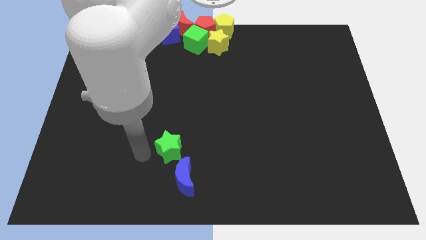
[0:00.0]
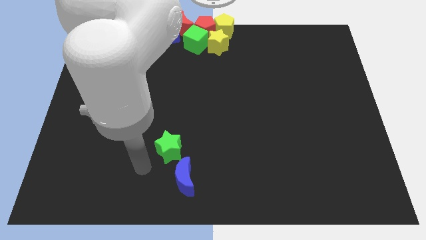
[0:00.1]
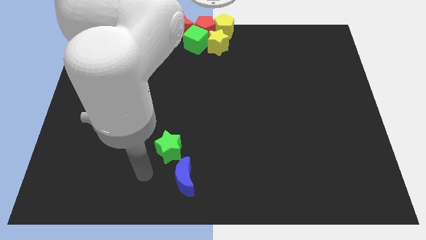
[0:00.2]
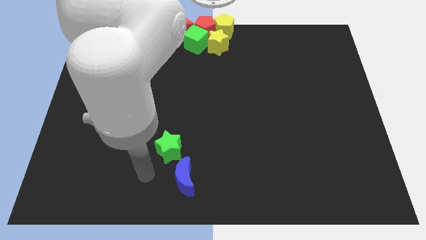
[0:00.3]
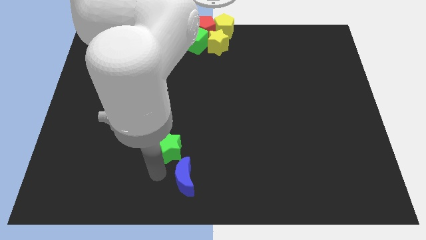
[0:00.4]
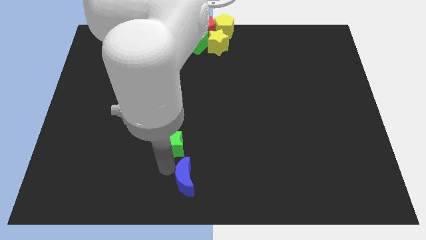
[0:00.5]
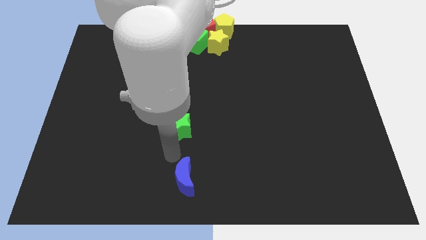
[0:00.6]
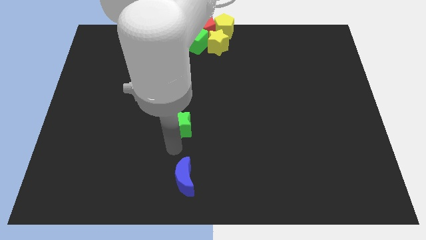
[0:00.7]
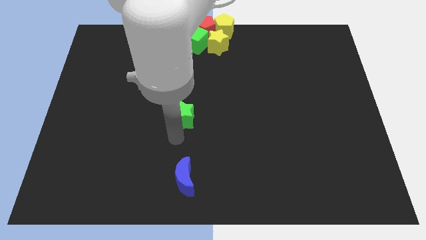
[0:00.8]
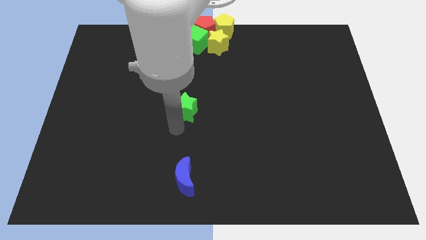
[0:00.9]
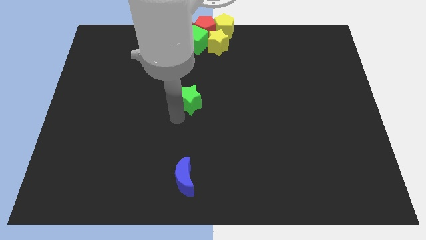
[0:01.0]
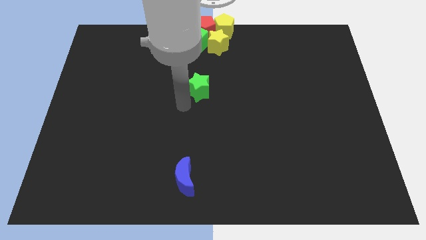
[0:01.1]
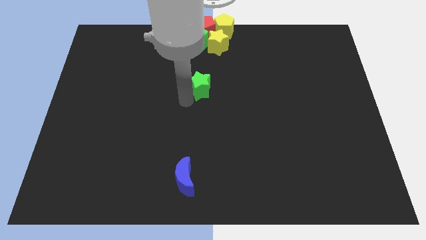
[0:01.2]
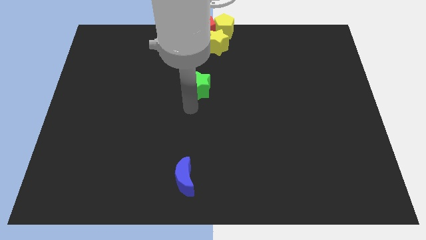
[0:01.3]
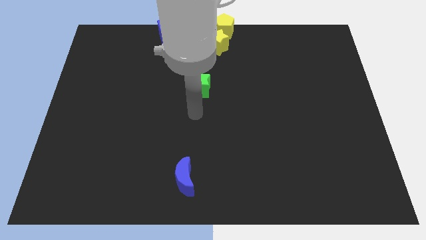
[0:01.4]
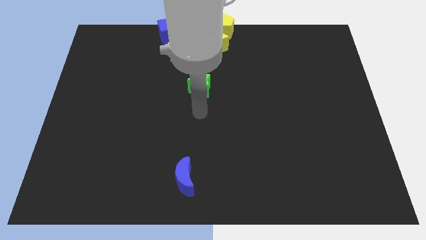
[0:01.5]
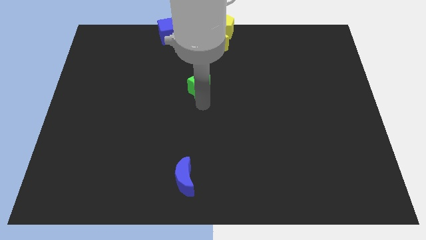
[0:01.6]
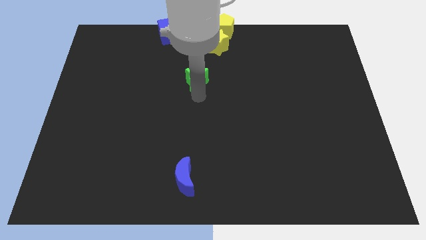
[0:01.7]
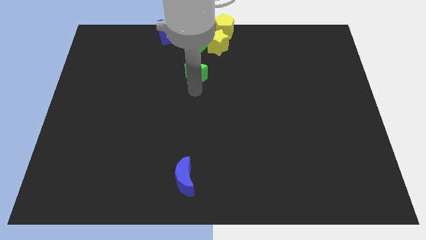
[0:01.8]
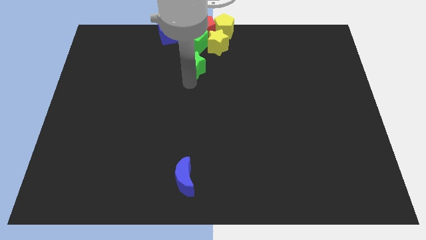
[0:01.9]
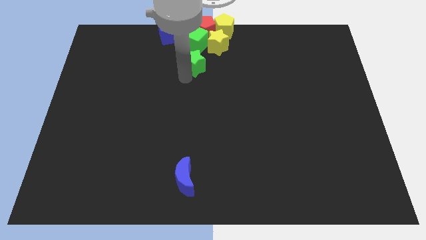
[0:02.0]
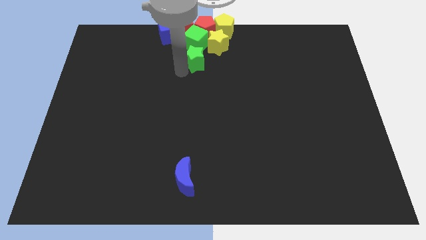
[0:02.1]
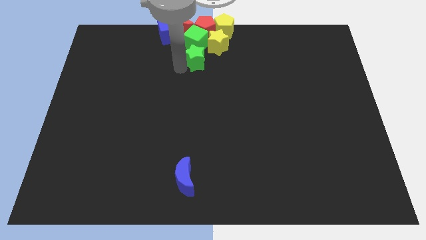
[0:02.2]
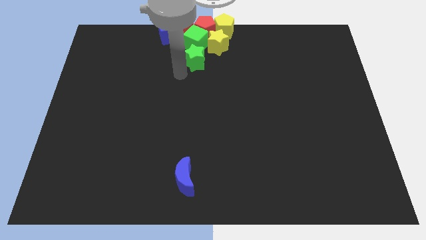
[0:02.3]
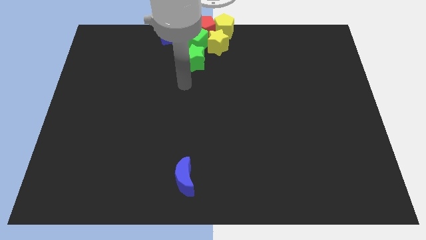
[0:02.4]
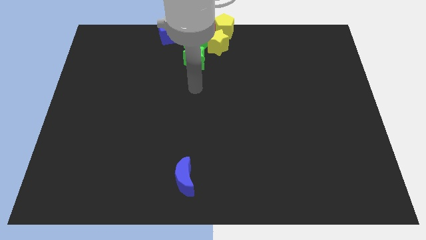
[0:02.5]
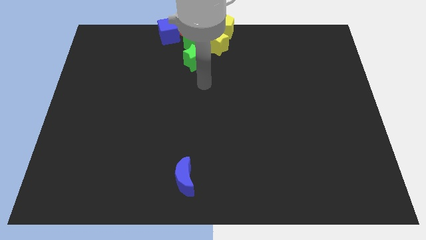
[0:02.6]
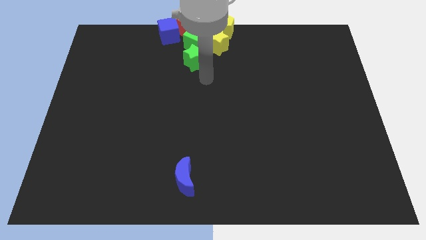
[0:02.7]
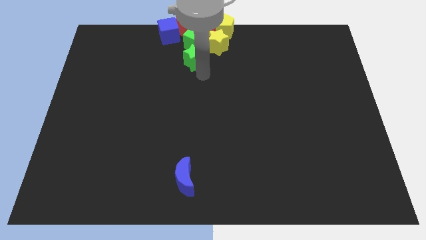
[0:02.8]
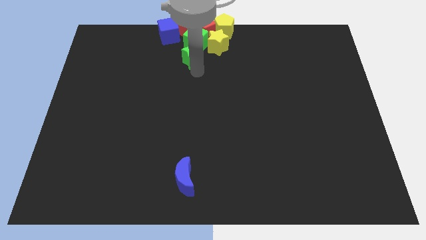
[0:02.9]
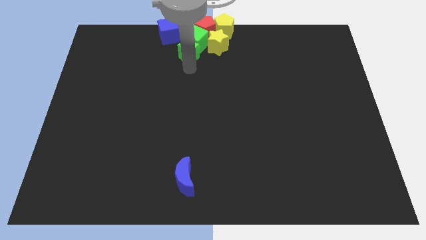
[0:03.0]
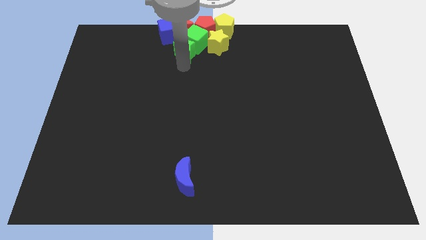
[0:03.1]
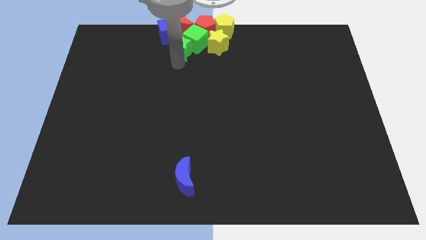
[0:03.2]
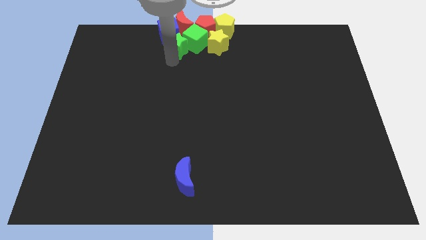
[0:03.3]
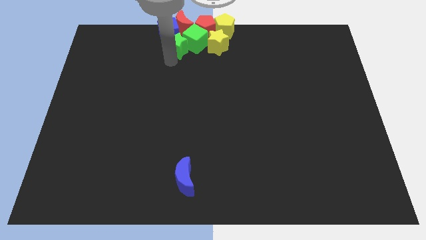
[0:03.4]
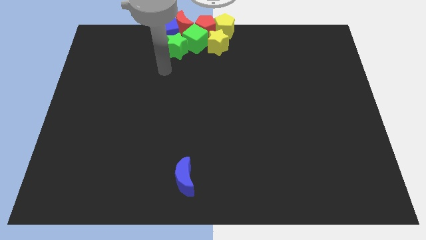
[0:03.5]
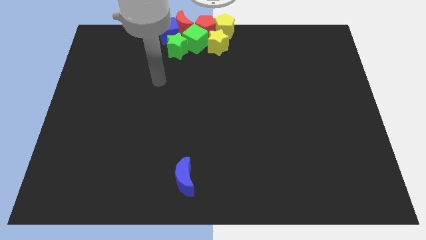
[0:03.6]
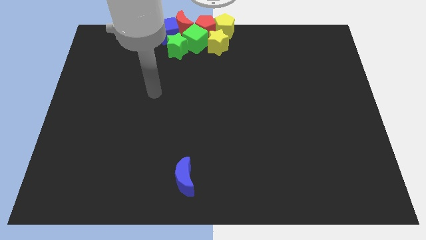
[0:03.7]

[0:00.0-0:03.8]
separate green star from blue moon

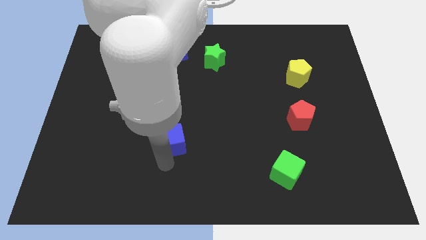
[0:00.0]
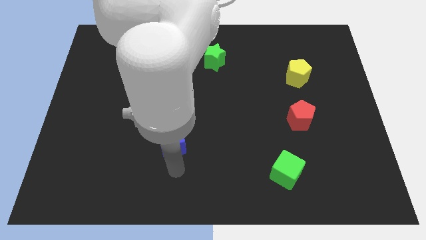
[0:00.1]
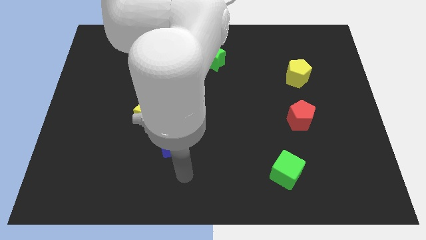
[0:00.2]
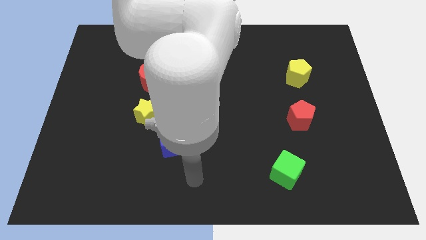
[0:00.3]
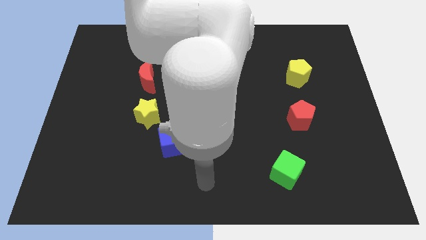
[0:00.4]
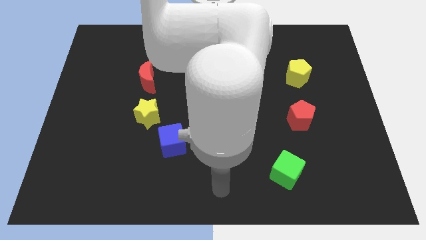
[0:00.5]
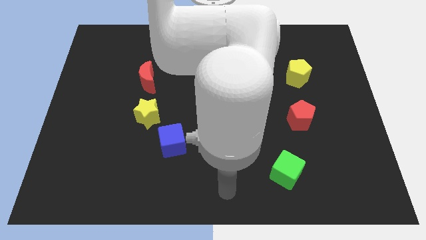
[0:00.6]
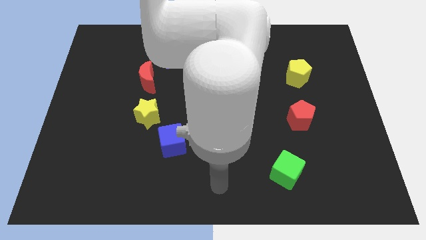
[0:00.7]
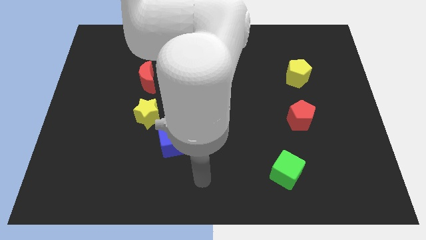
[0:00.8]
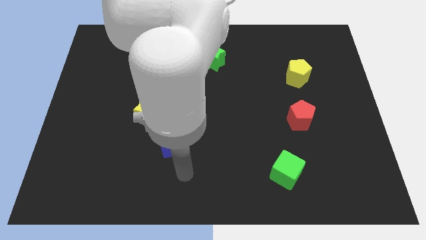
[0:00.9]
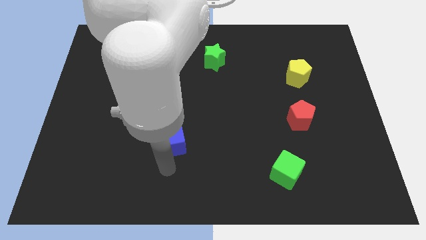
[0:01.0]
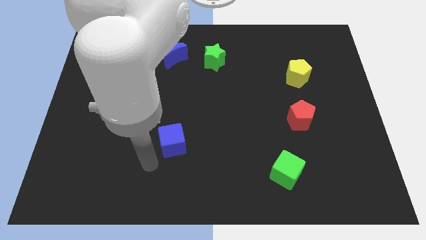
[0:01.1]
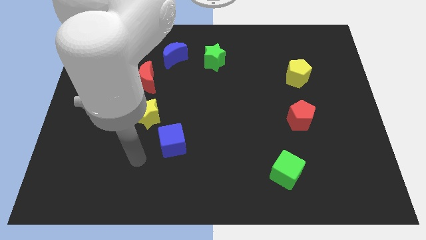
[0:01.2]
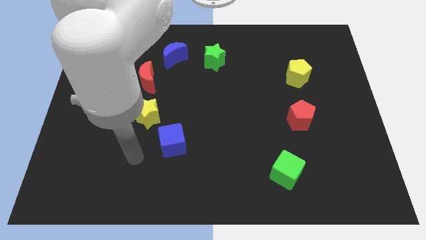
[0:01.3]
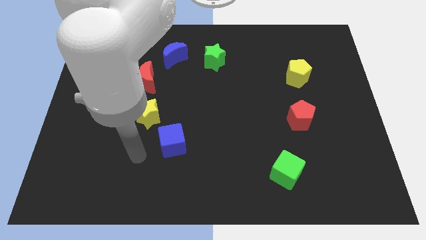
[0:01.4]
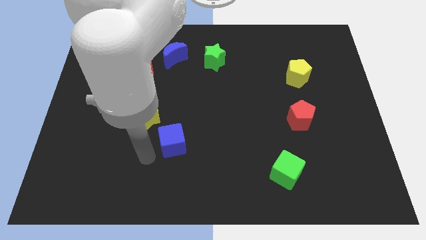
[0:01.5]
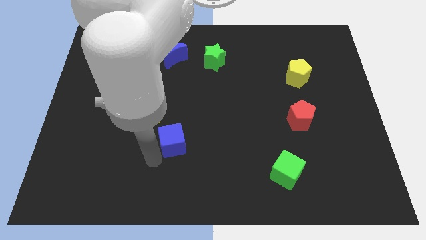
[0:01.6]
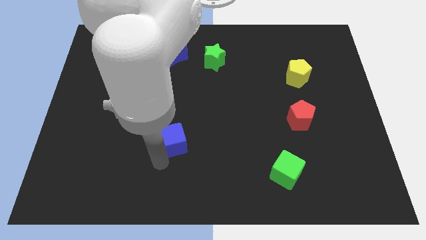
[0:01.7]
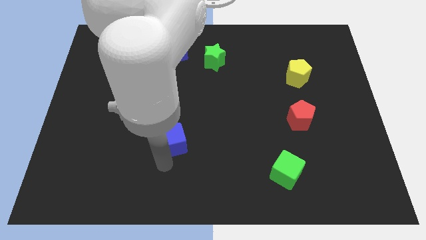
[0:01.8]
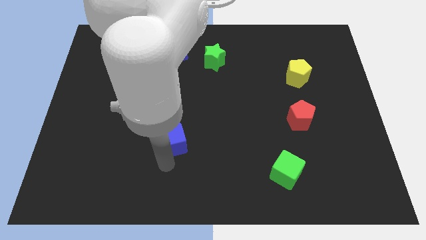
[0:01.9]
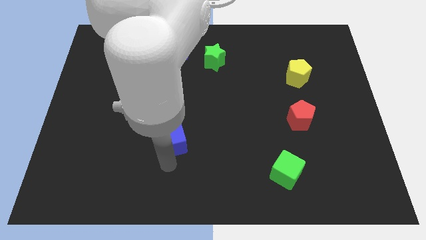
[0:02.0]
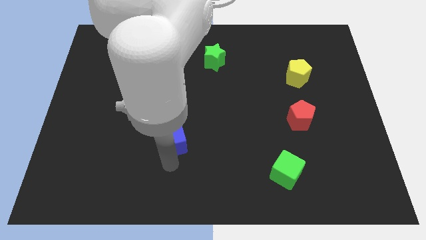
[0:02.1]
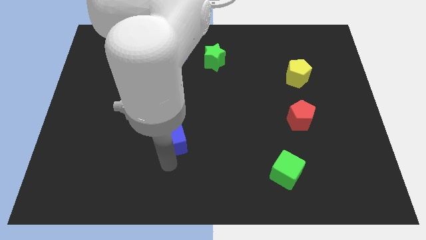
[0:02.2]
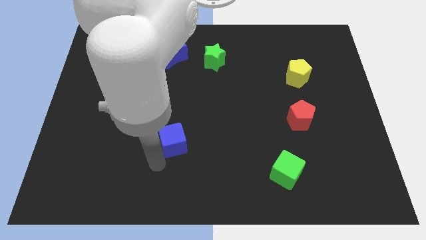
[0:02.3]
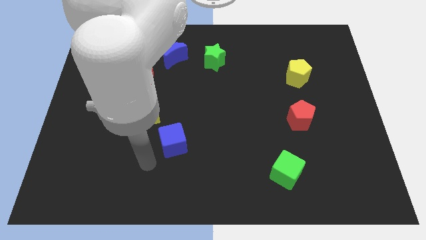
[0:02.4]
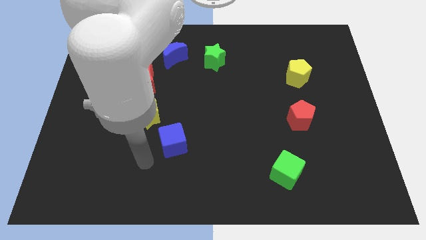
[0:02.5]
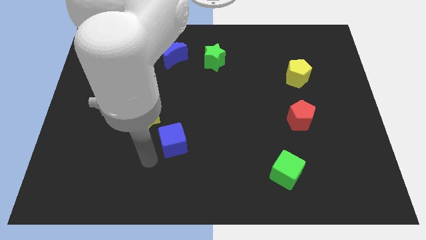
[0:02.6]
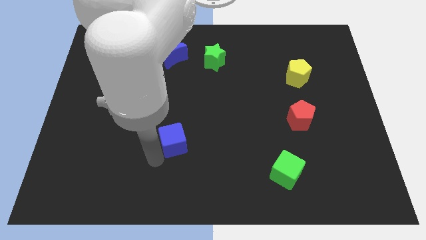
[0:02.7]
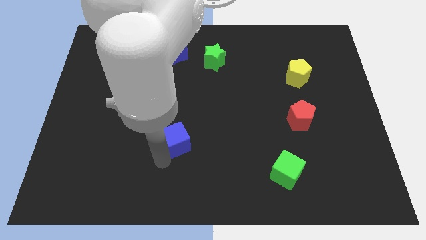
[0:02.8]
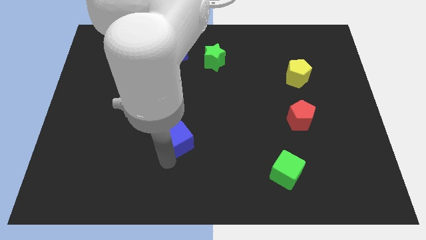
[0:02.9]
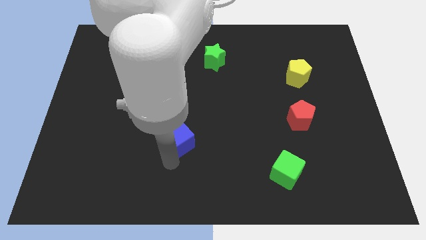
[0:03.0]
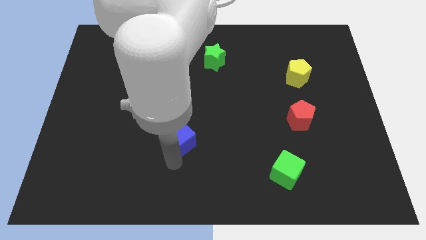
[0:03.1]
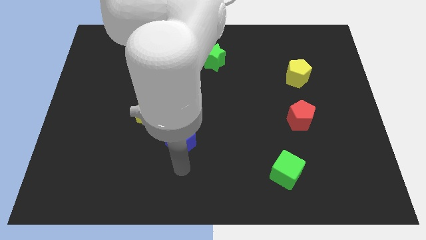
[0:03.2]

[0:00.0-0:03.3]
place your arm at the bottom of the blue cube

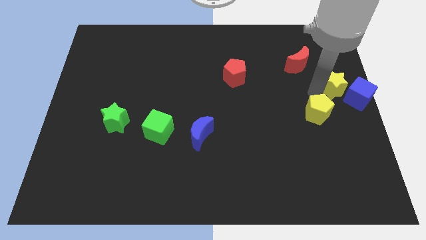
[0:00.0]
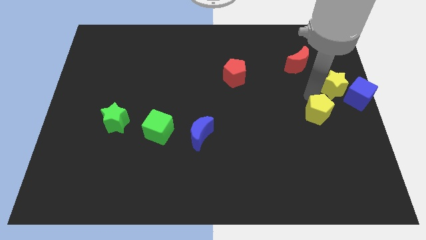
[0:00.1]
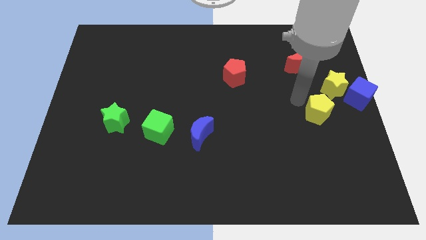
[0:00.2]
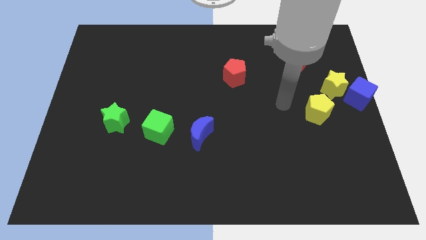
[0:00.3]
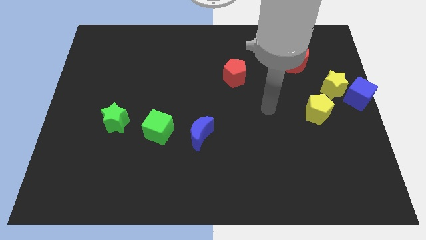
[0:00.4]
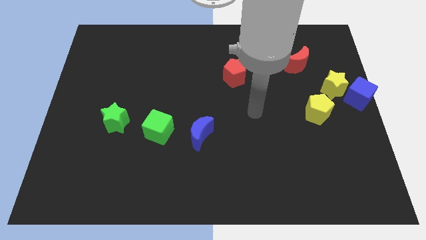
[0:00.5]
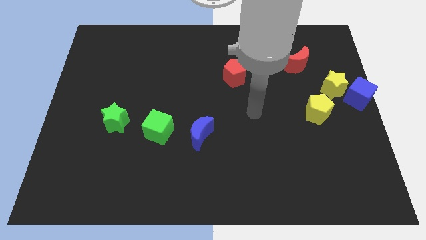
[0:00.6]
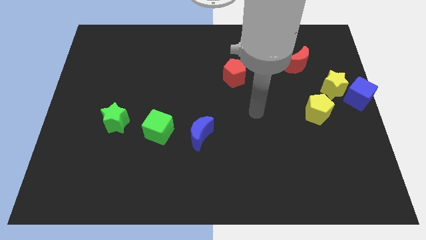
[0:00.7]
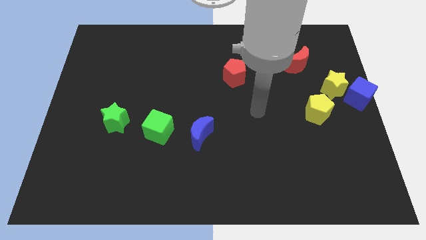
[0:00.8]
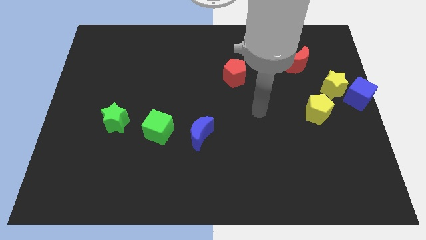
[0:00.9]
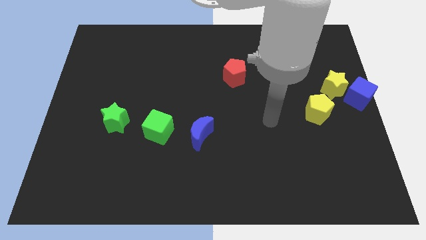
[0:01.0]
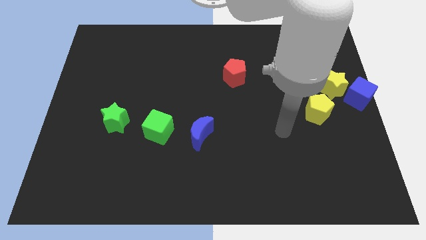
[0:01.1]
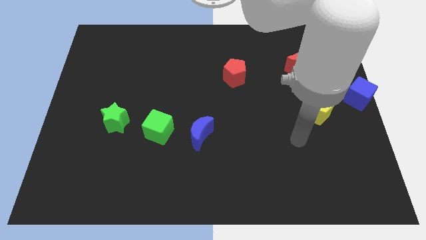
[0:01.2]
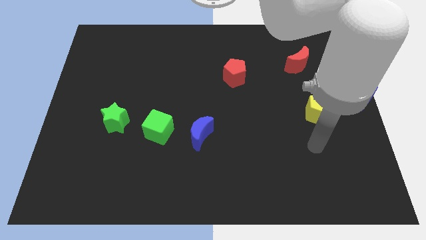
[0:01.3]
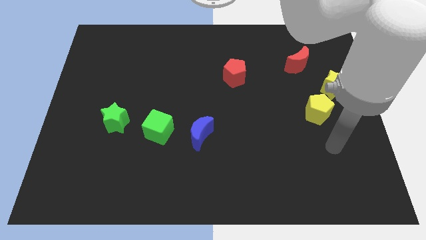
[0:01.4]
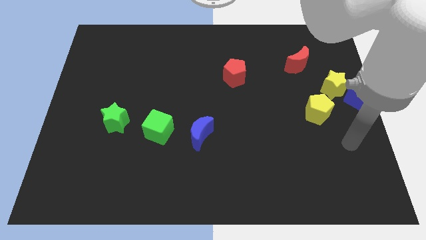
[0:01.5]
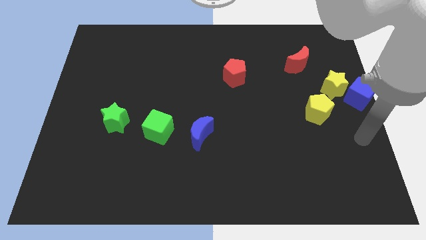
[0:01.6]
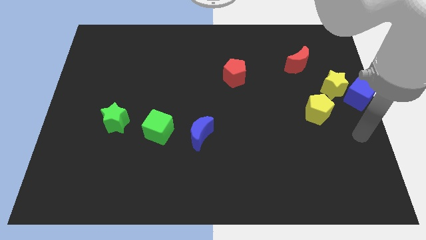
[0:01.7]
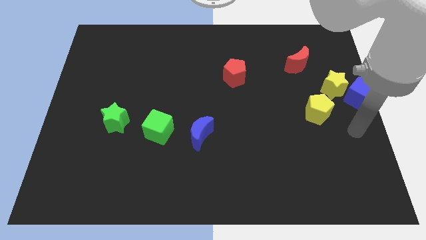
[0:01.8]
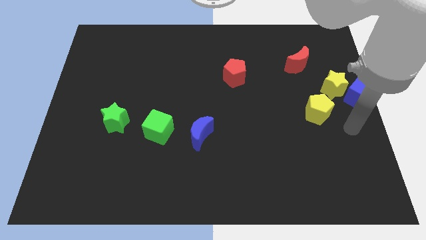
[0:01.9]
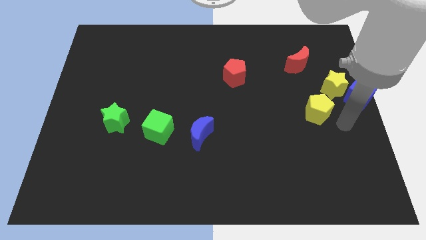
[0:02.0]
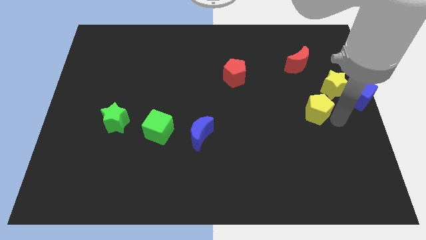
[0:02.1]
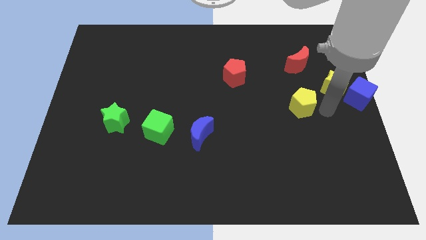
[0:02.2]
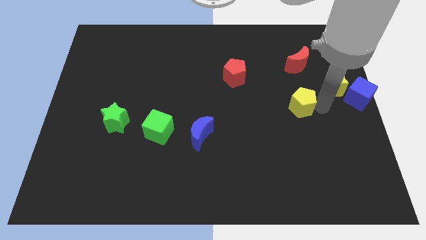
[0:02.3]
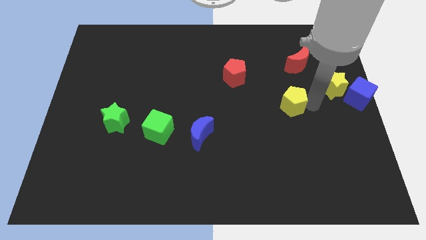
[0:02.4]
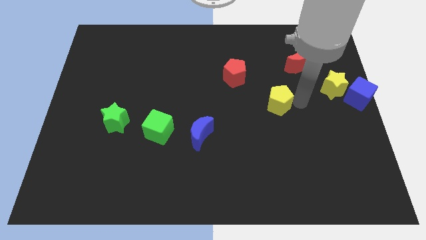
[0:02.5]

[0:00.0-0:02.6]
move yellow pentagon diagonally towards red pentagon
